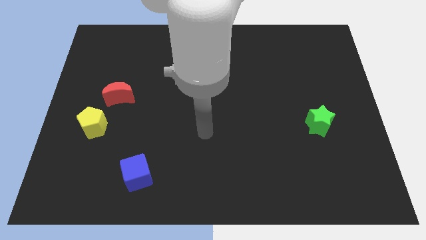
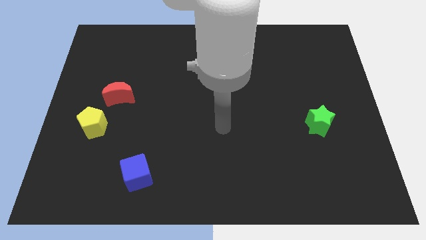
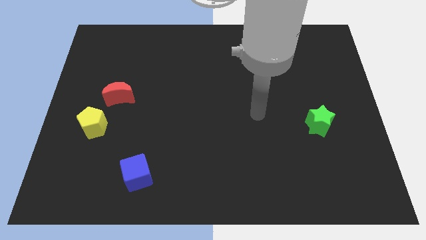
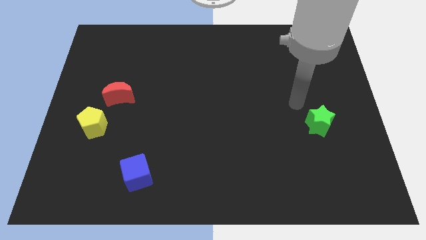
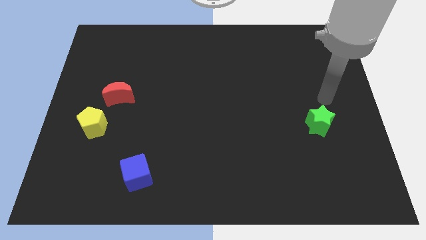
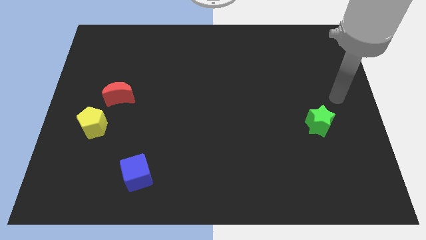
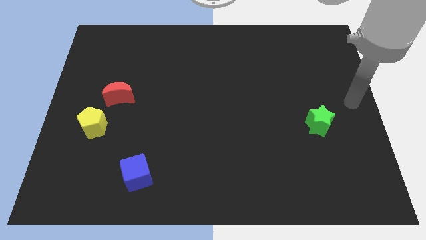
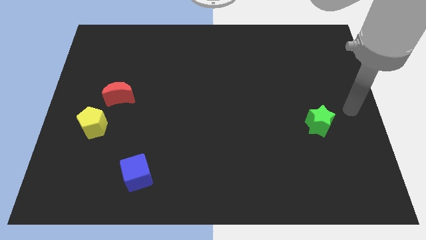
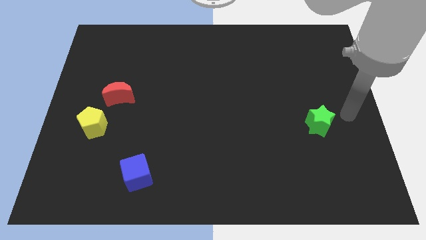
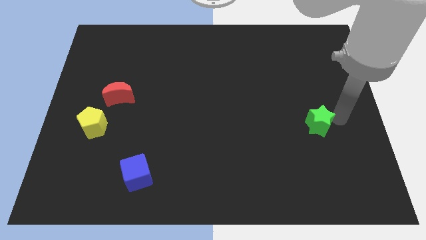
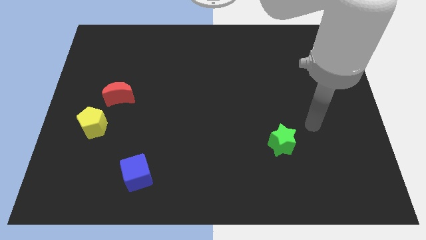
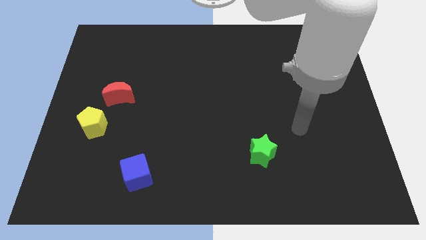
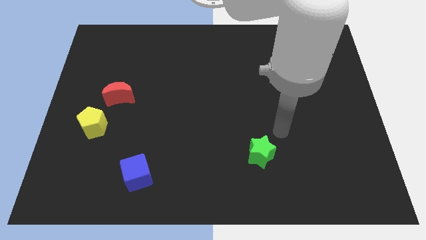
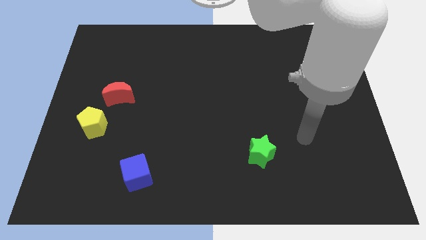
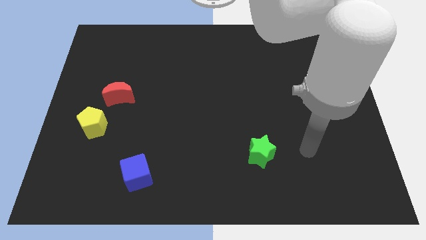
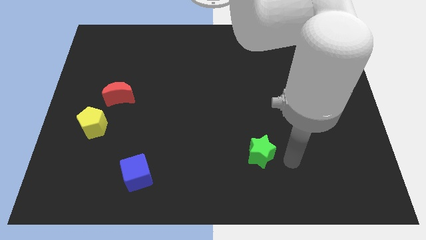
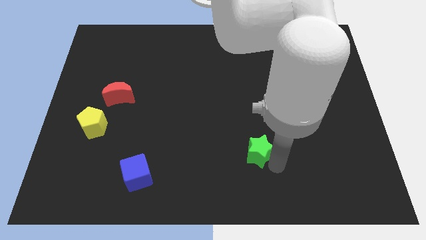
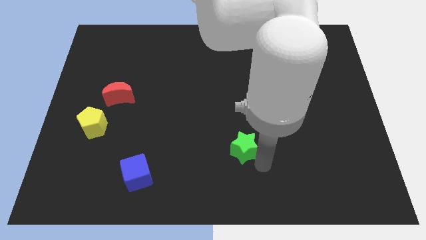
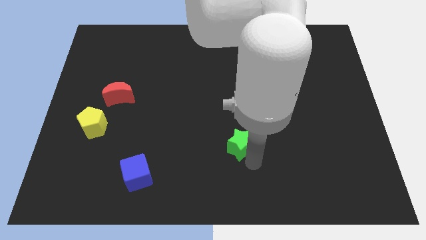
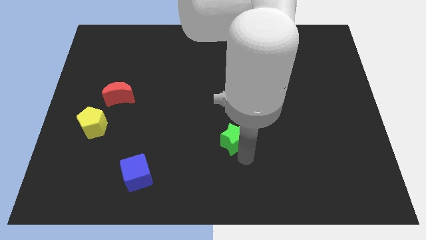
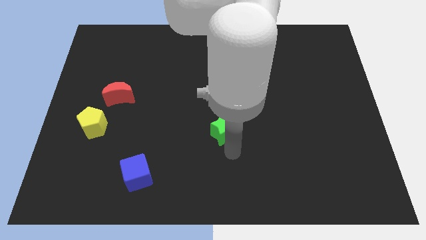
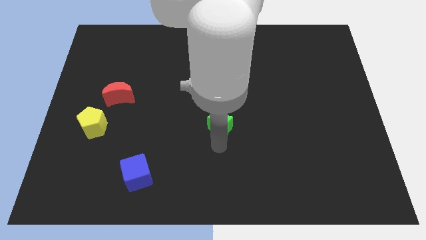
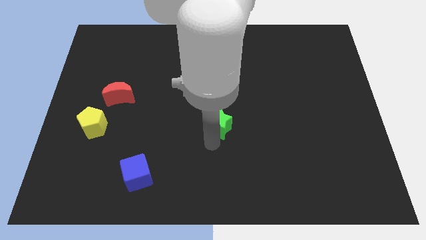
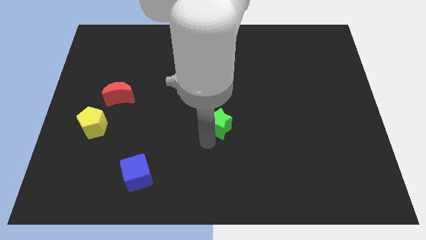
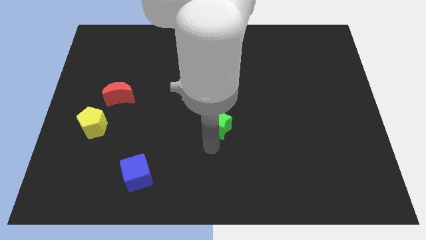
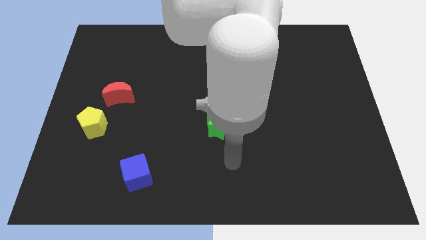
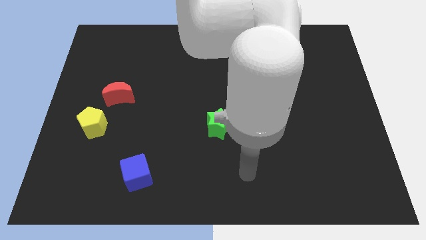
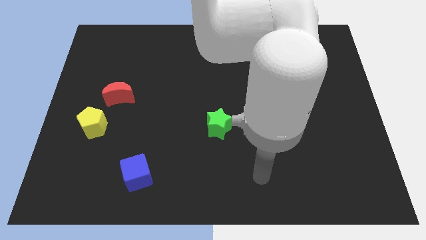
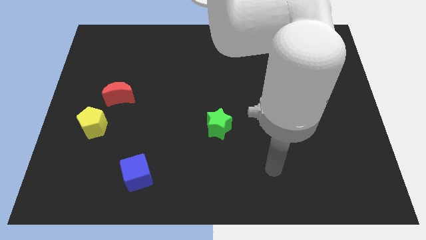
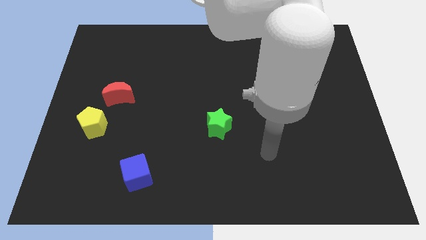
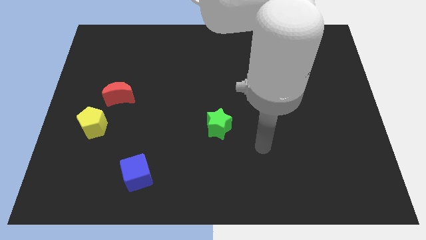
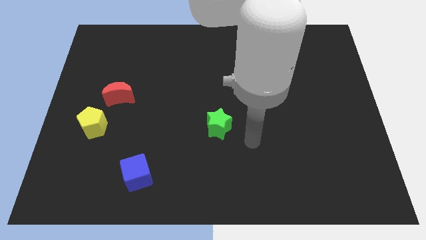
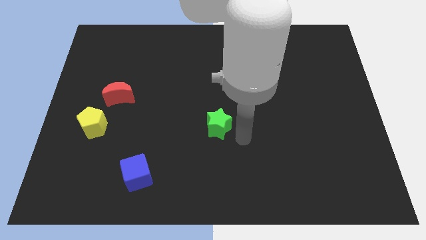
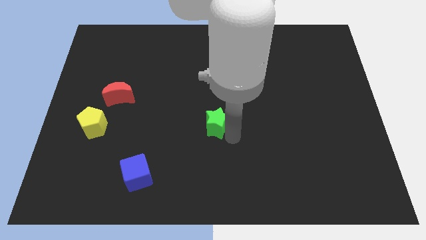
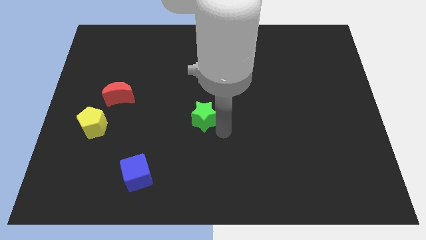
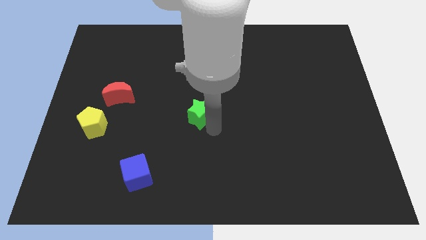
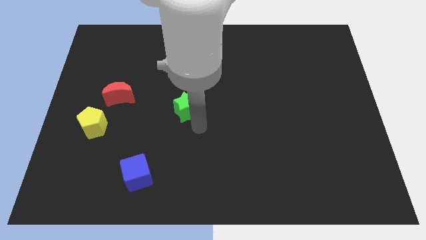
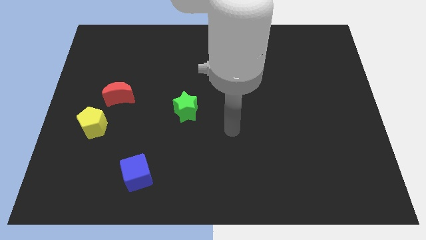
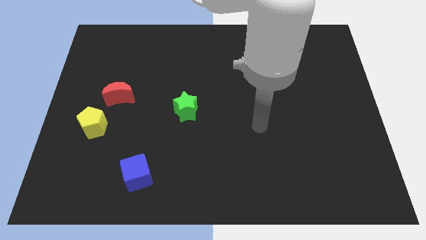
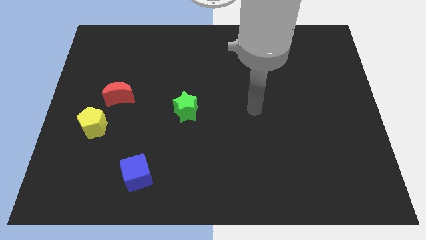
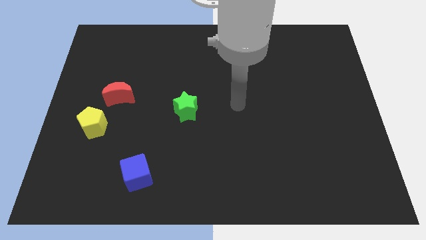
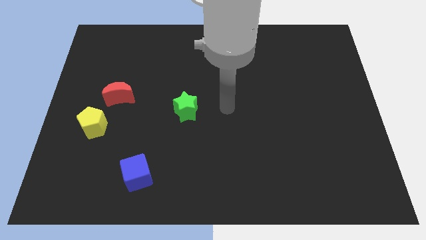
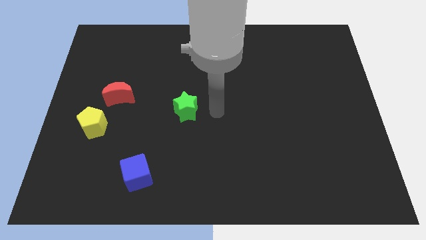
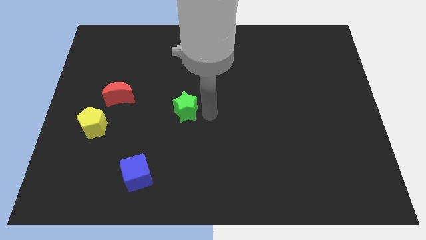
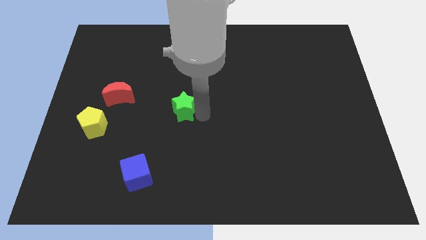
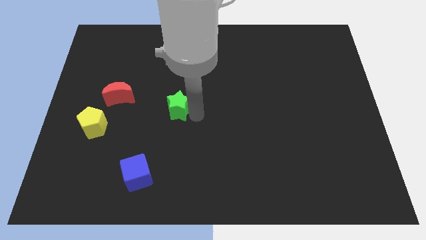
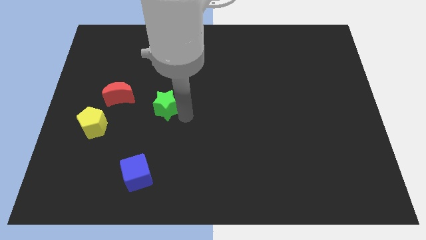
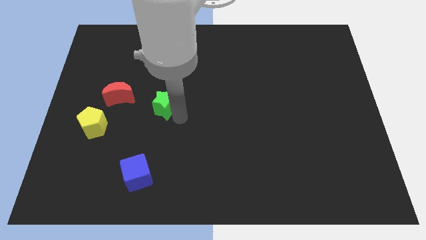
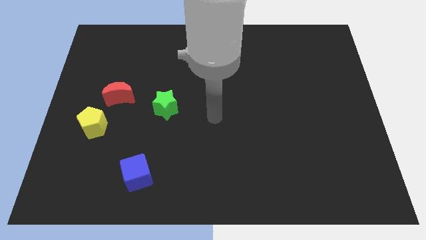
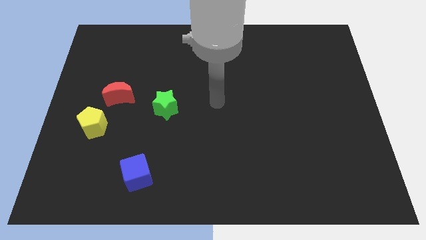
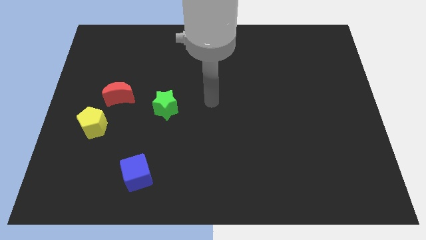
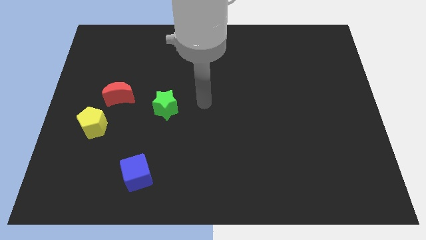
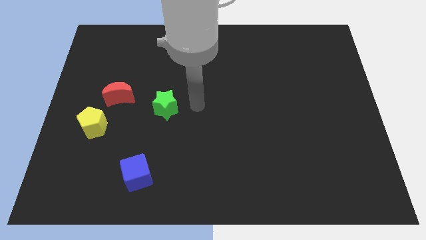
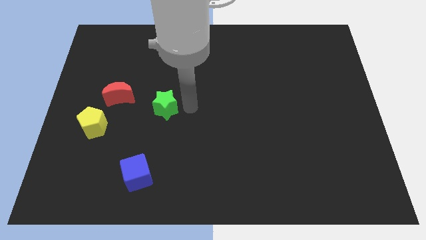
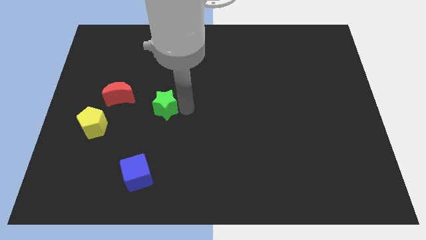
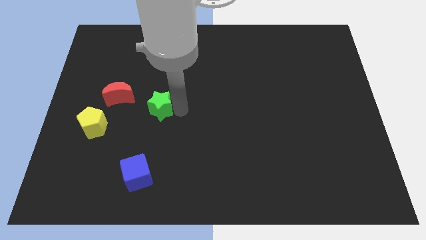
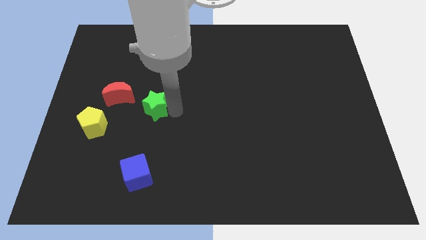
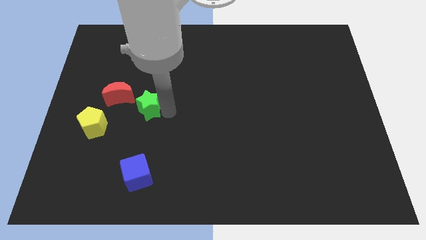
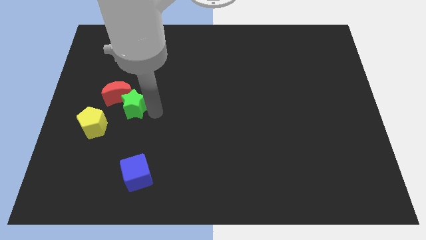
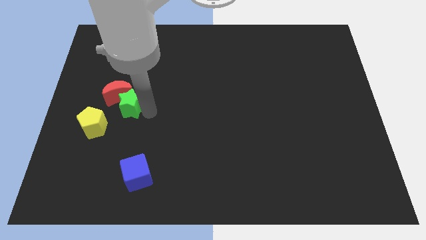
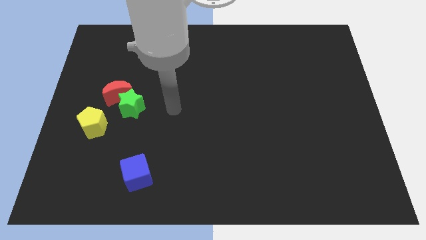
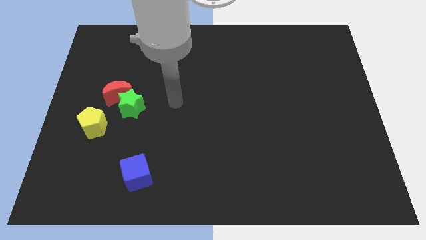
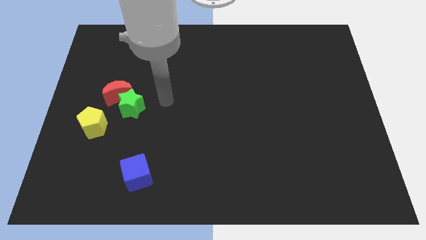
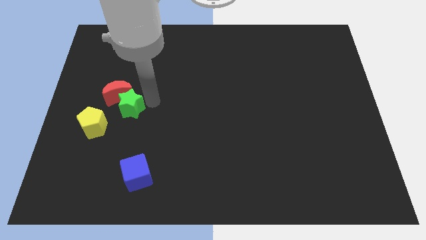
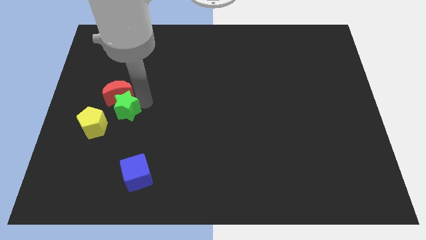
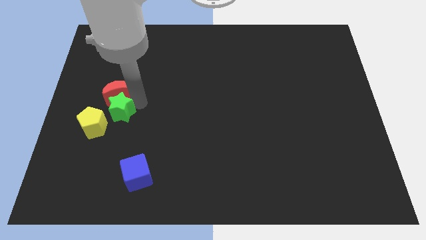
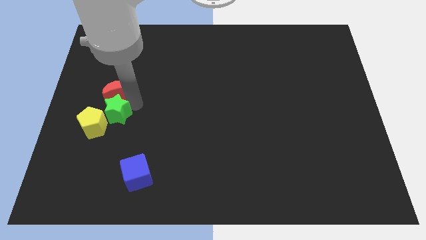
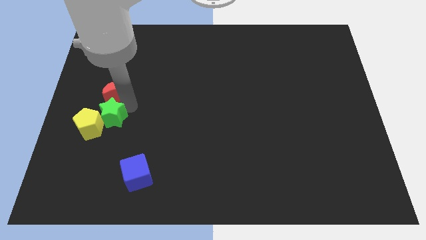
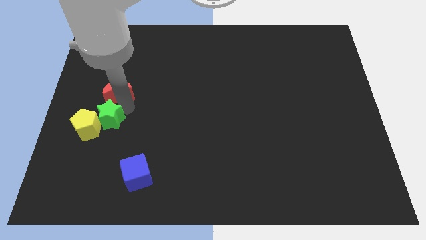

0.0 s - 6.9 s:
put the green block next to the yellow block

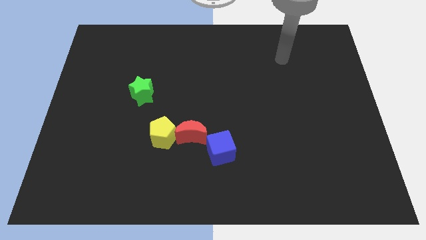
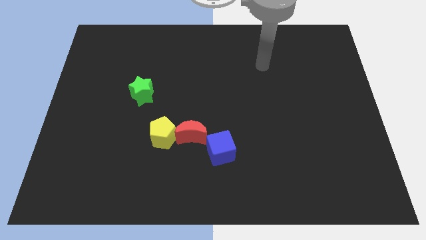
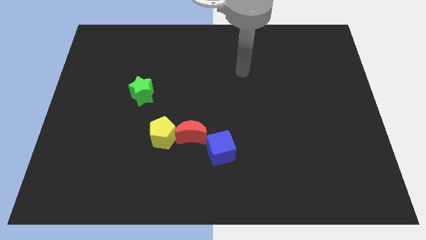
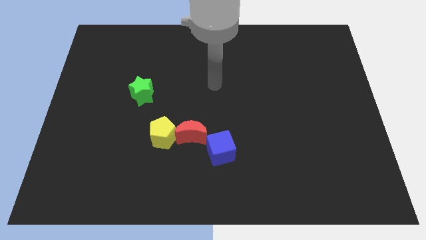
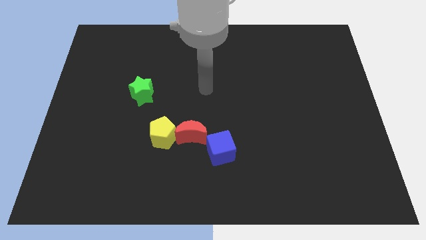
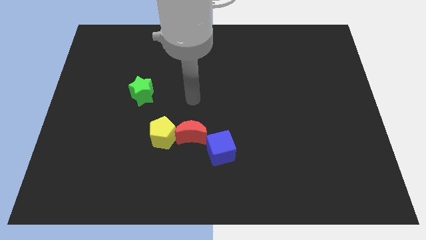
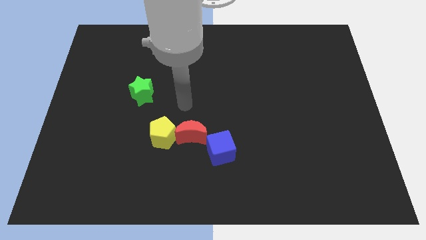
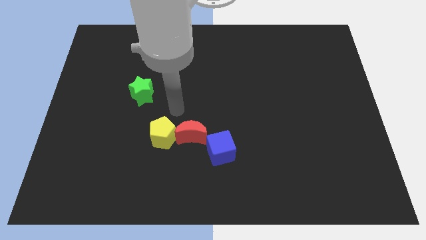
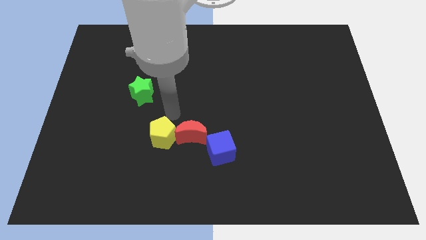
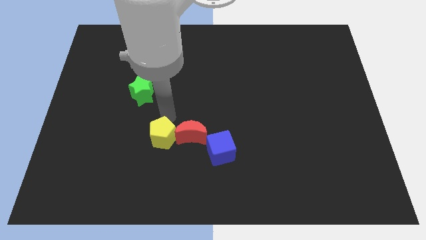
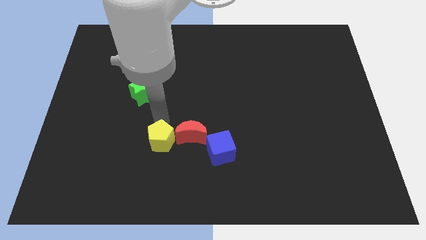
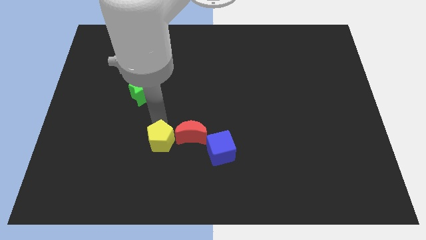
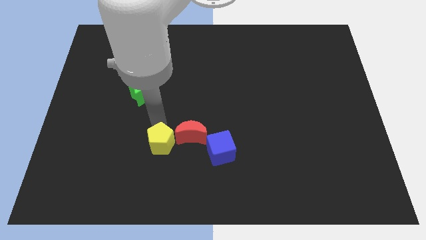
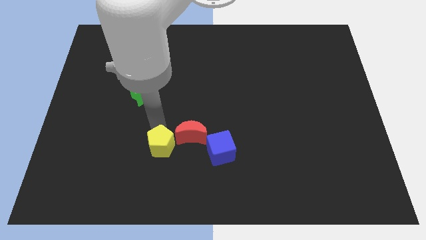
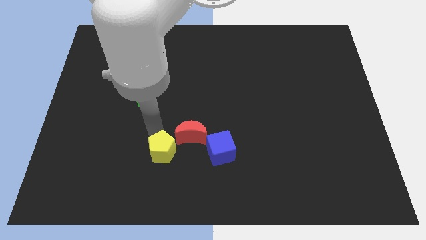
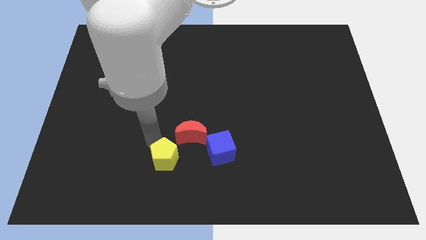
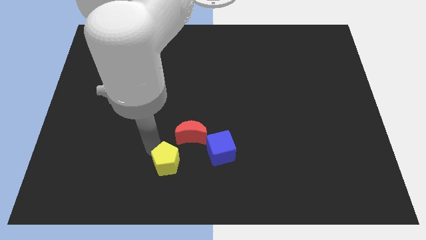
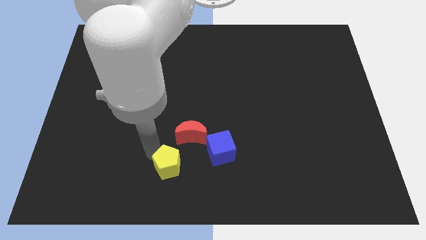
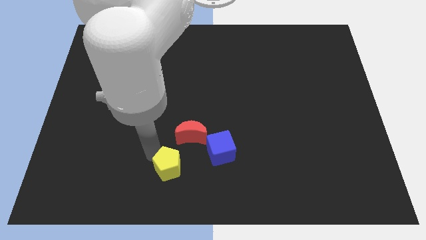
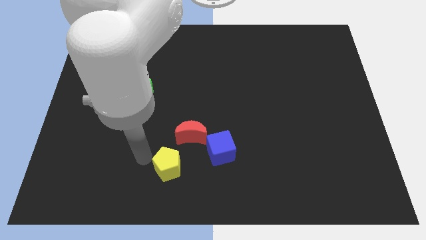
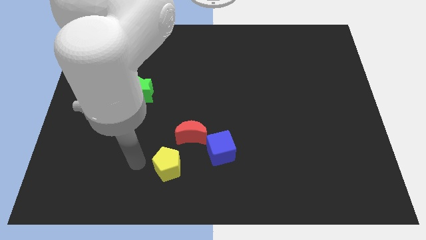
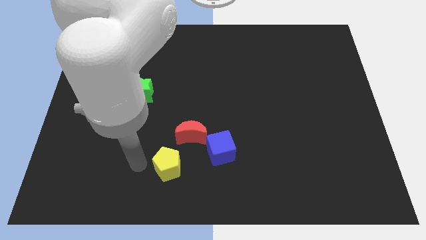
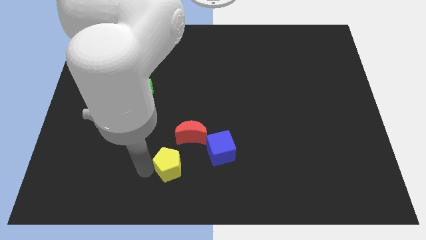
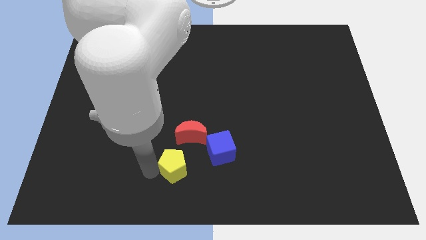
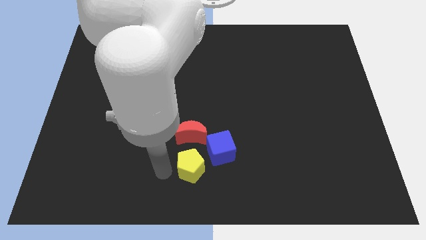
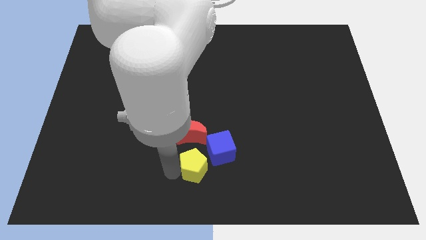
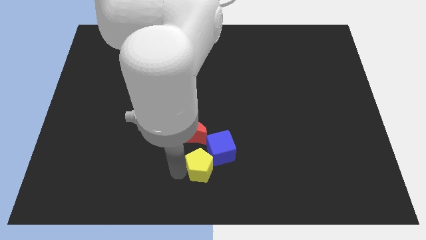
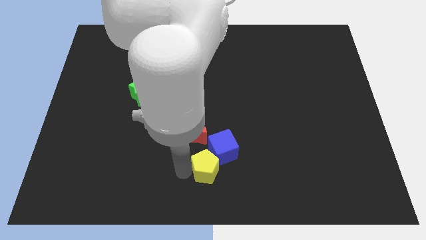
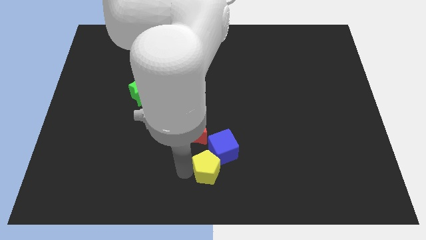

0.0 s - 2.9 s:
slide the yellow block next to the cube
